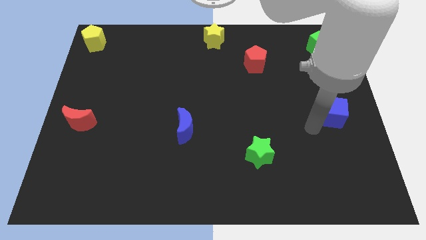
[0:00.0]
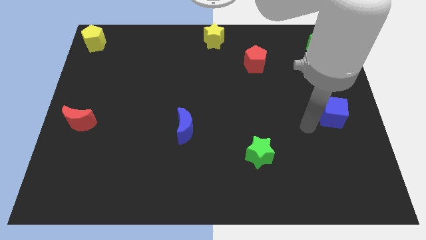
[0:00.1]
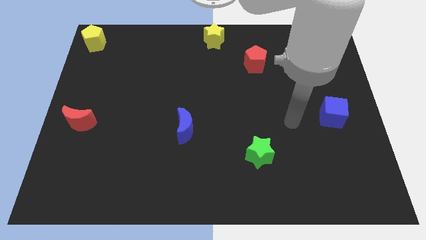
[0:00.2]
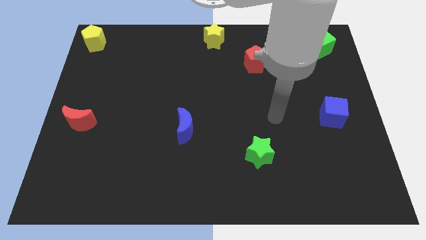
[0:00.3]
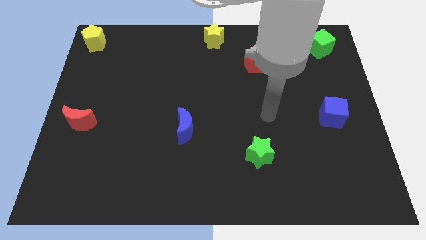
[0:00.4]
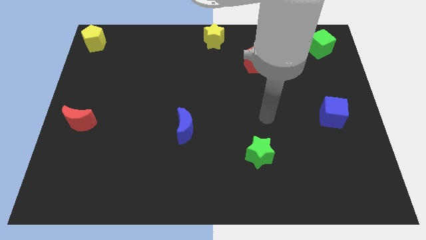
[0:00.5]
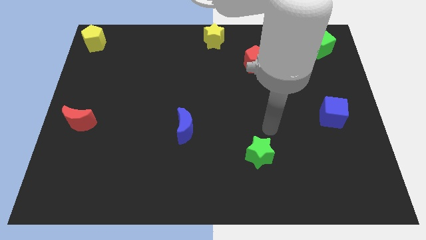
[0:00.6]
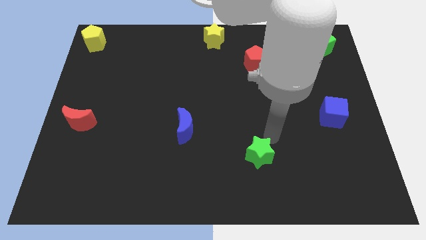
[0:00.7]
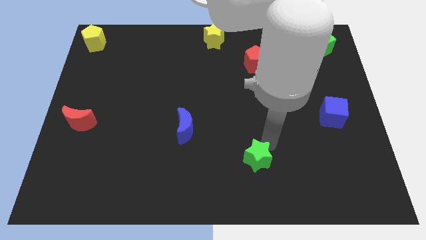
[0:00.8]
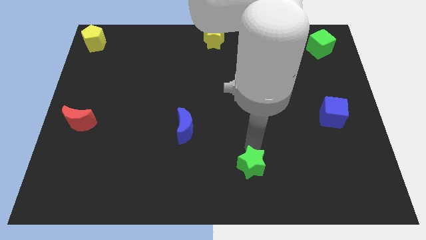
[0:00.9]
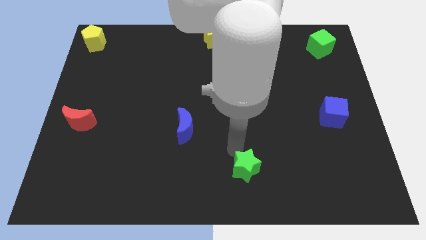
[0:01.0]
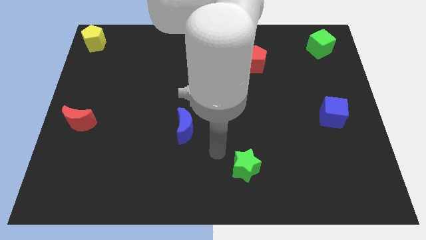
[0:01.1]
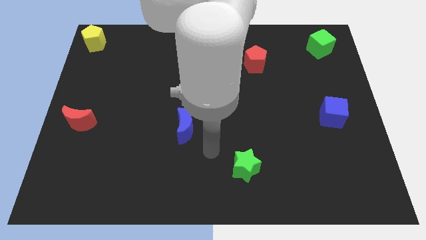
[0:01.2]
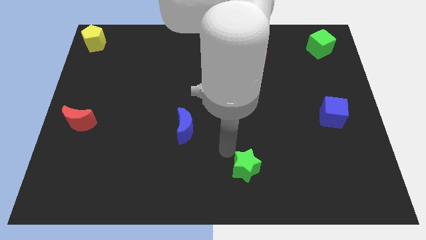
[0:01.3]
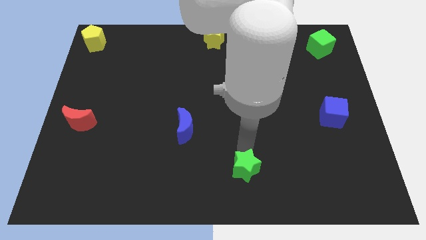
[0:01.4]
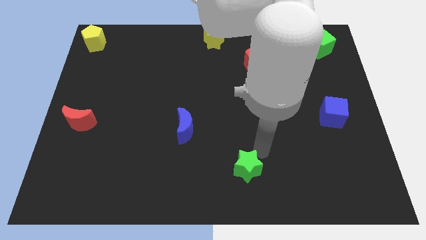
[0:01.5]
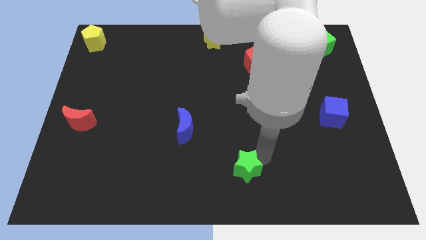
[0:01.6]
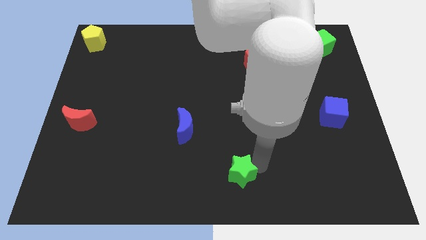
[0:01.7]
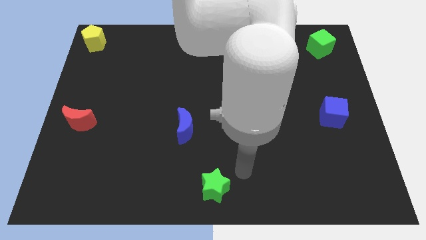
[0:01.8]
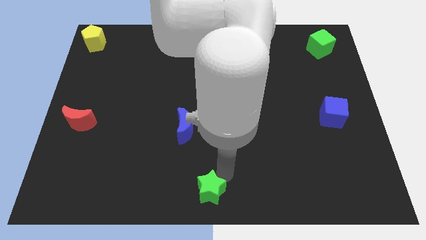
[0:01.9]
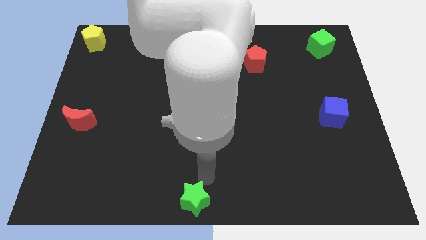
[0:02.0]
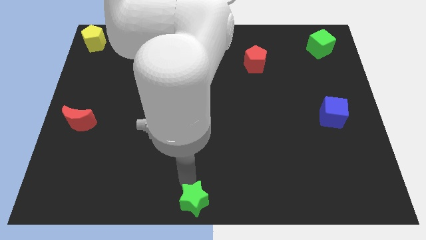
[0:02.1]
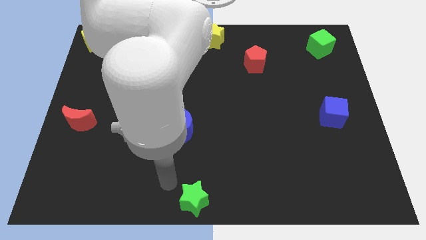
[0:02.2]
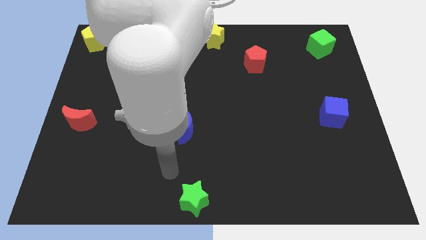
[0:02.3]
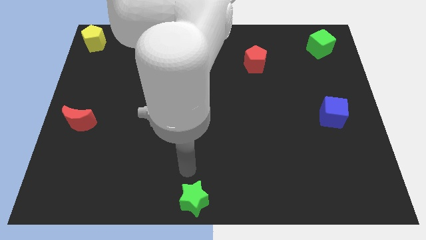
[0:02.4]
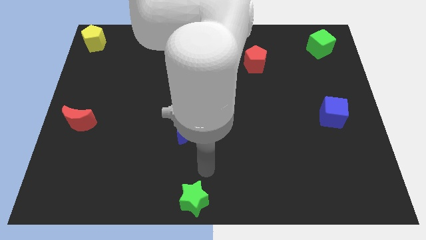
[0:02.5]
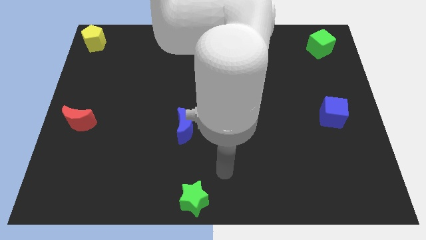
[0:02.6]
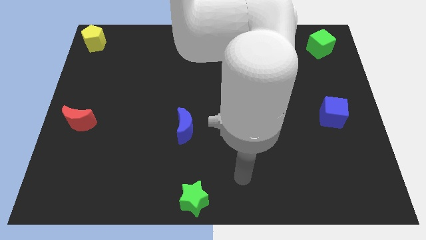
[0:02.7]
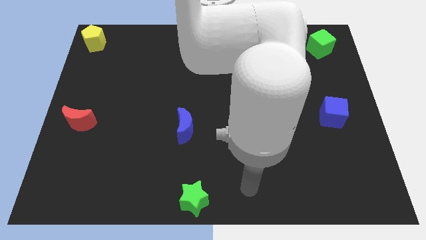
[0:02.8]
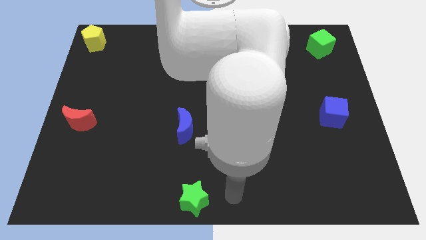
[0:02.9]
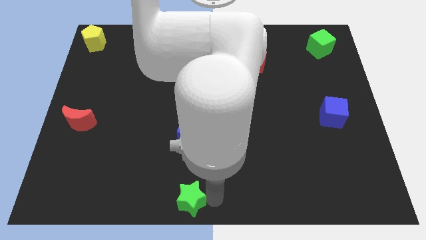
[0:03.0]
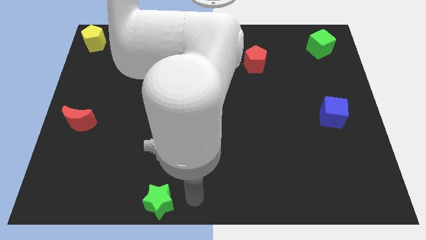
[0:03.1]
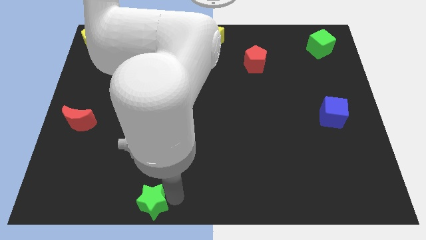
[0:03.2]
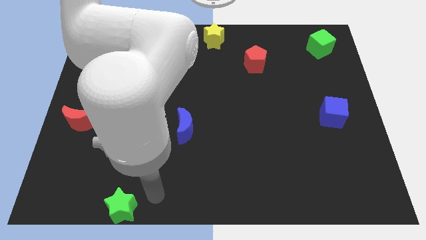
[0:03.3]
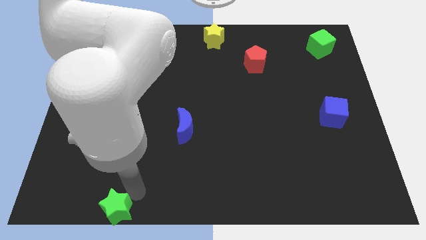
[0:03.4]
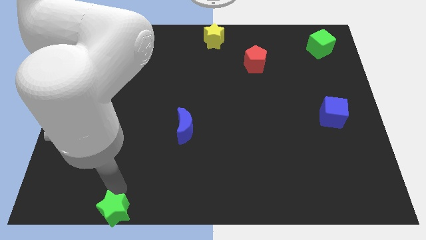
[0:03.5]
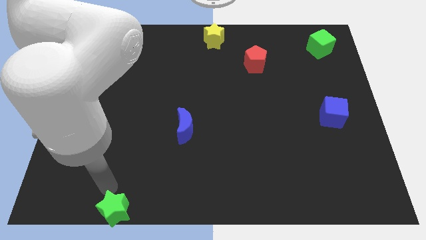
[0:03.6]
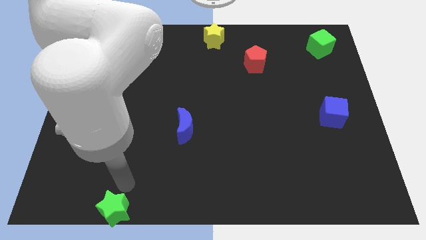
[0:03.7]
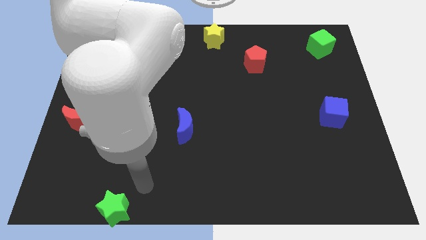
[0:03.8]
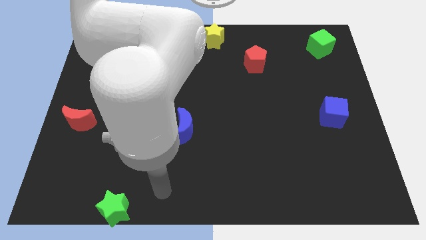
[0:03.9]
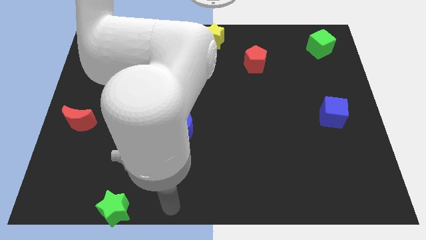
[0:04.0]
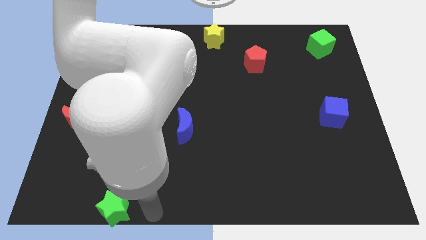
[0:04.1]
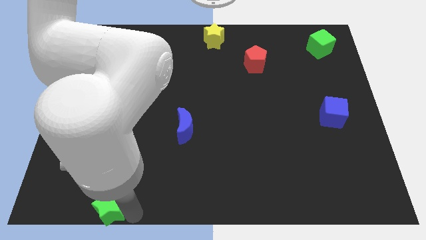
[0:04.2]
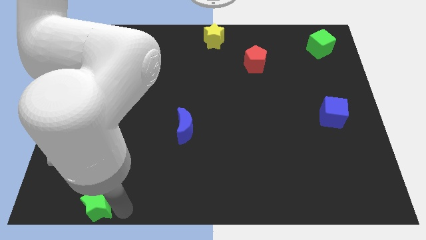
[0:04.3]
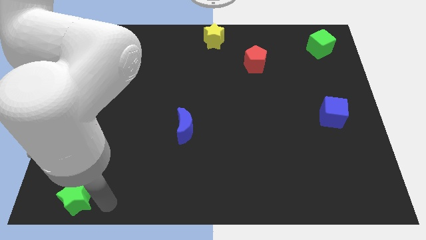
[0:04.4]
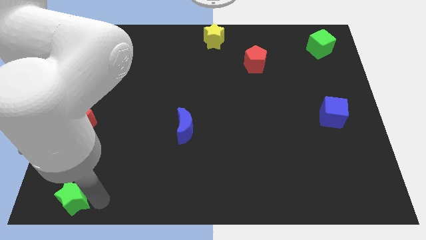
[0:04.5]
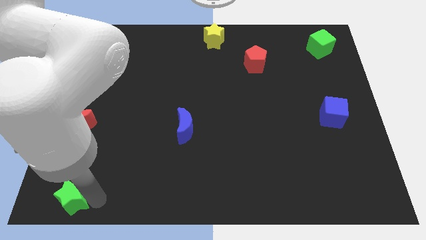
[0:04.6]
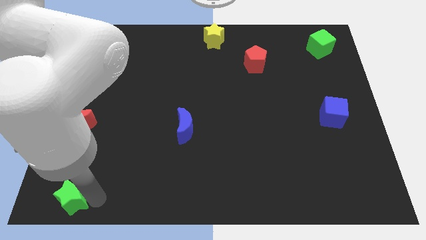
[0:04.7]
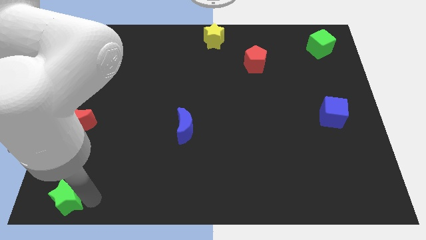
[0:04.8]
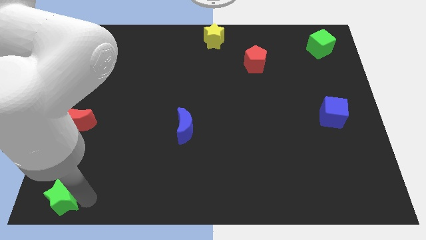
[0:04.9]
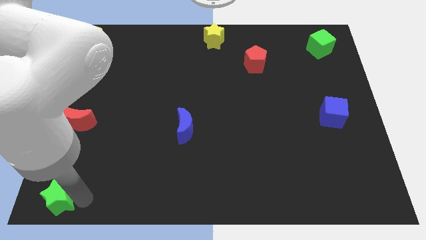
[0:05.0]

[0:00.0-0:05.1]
move the green star to the bottom left of the board

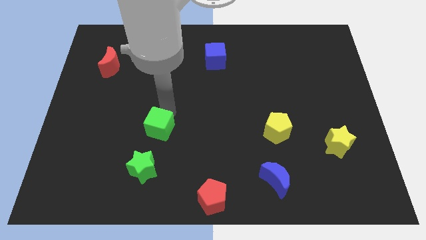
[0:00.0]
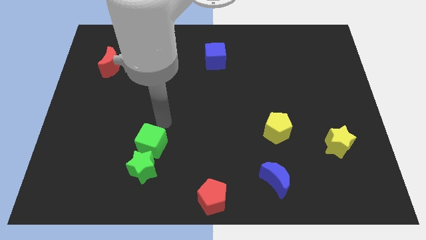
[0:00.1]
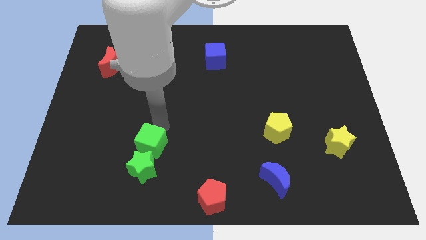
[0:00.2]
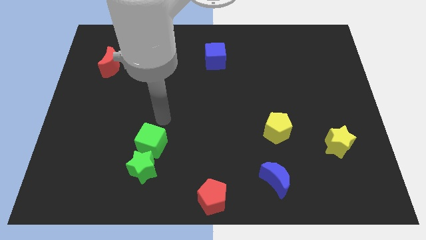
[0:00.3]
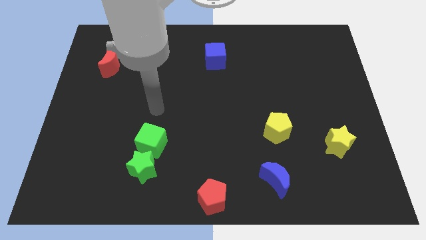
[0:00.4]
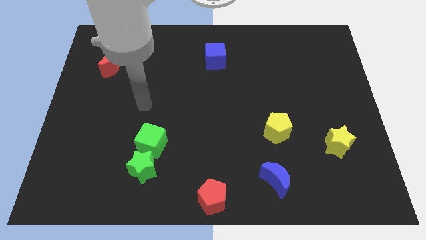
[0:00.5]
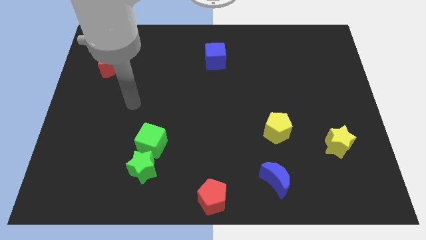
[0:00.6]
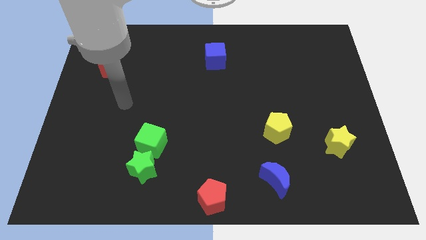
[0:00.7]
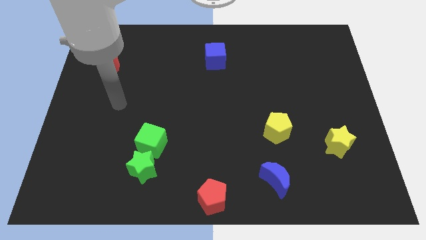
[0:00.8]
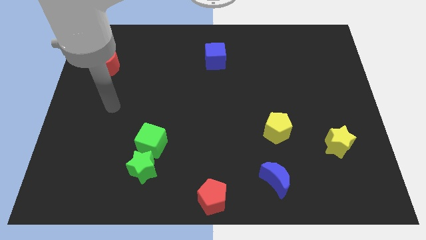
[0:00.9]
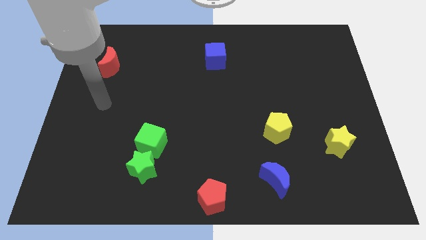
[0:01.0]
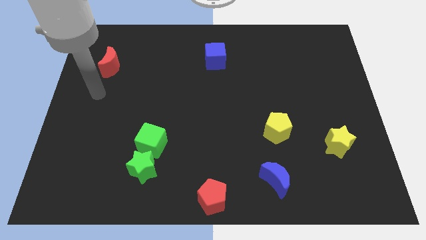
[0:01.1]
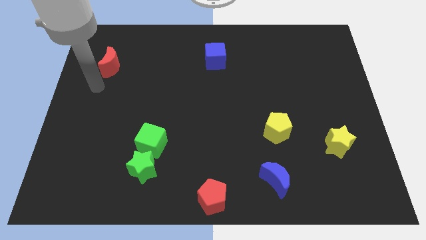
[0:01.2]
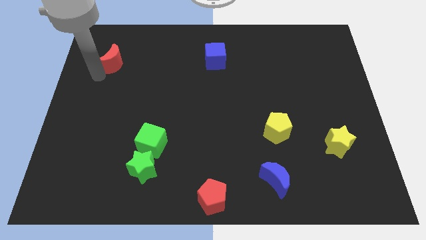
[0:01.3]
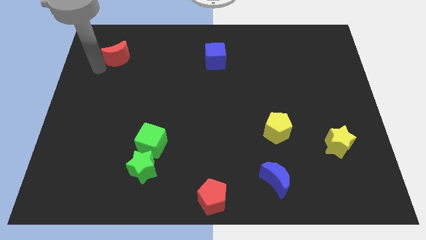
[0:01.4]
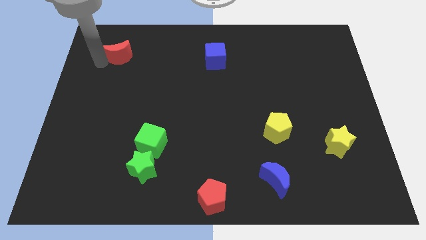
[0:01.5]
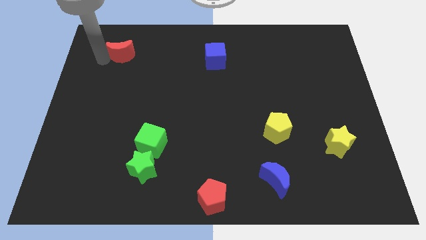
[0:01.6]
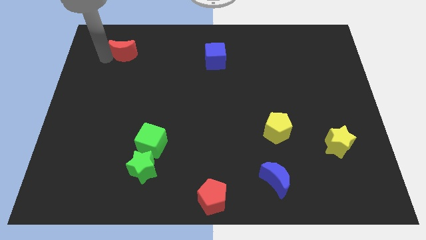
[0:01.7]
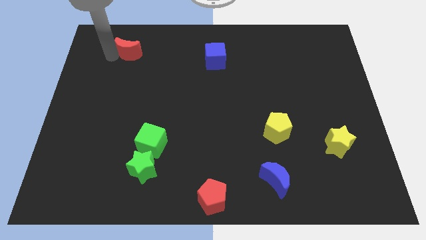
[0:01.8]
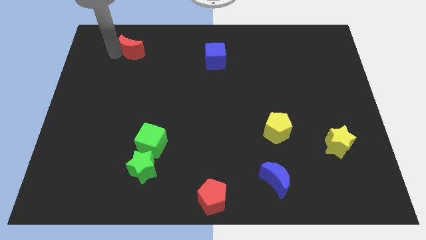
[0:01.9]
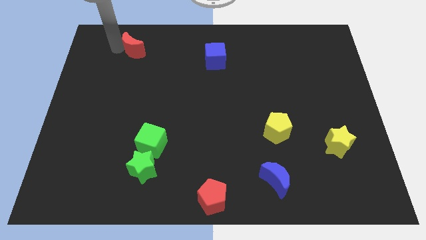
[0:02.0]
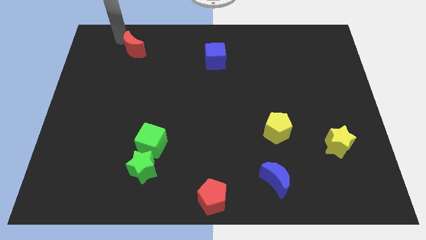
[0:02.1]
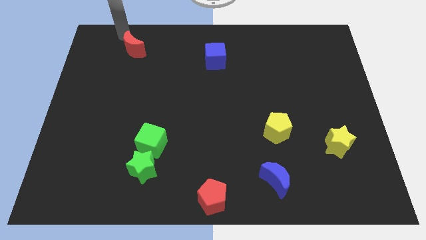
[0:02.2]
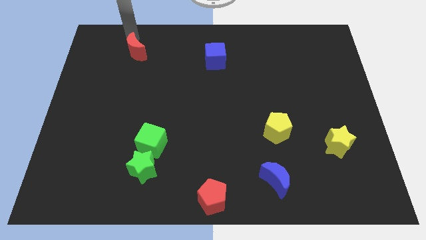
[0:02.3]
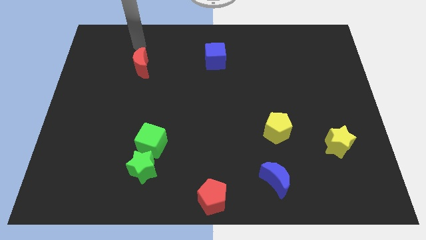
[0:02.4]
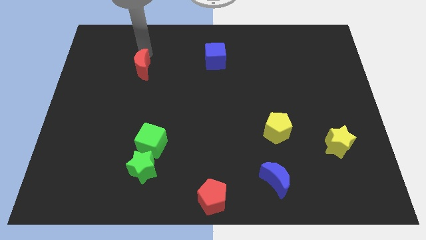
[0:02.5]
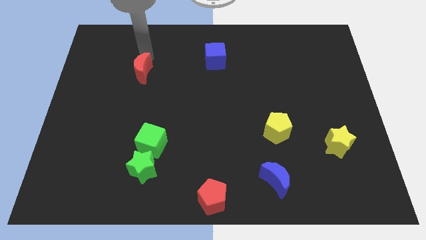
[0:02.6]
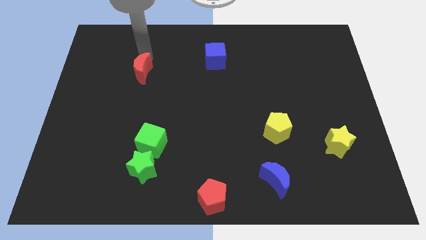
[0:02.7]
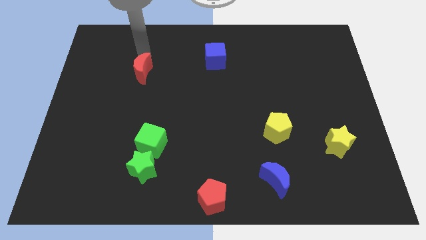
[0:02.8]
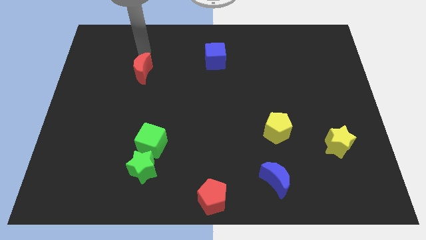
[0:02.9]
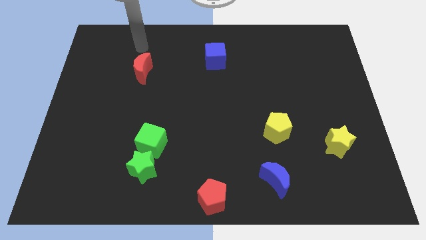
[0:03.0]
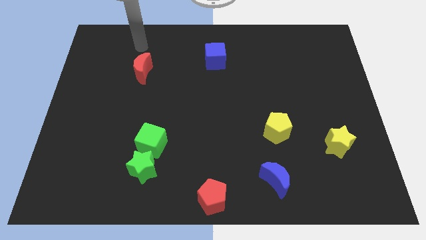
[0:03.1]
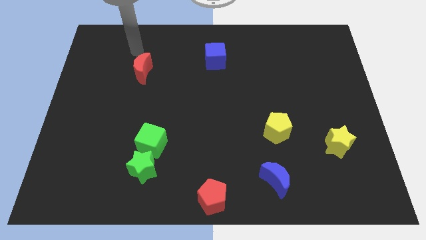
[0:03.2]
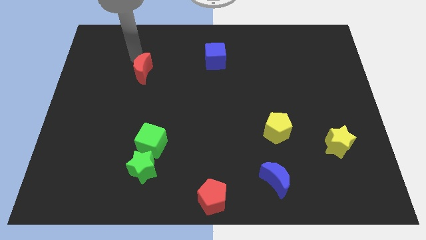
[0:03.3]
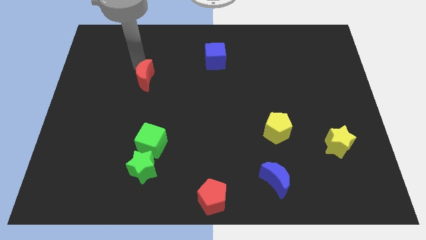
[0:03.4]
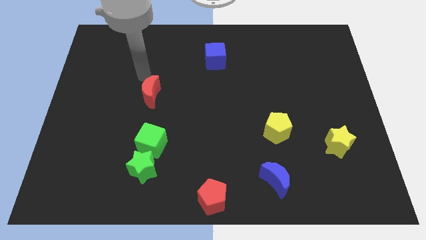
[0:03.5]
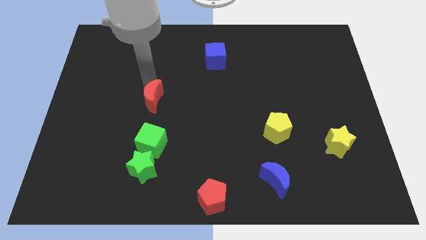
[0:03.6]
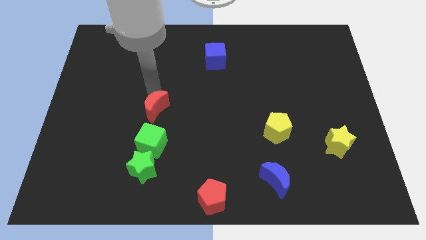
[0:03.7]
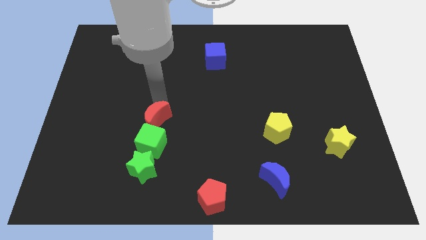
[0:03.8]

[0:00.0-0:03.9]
place the red moon to the top side of the green cube
